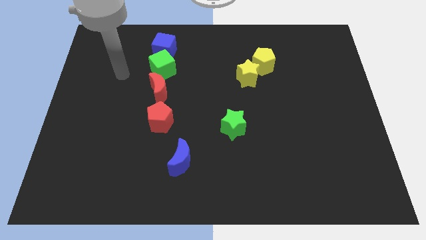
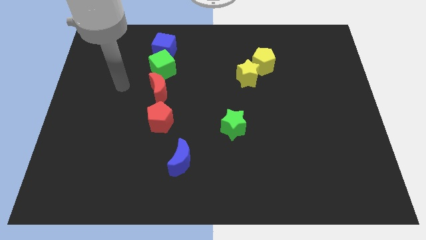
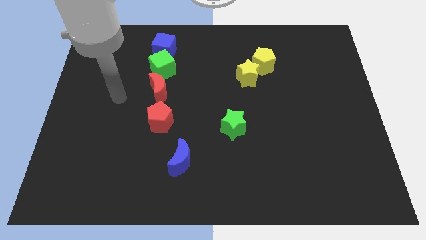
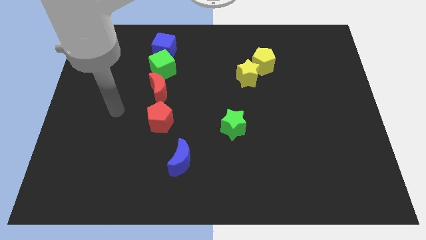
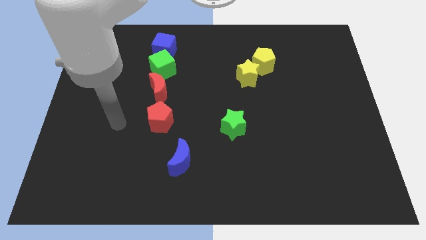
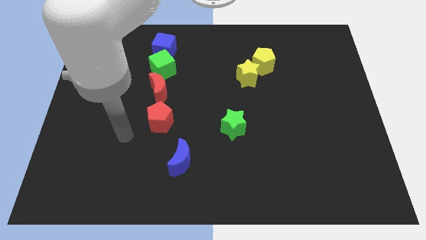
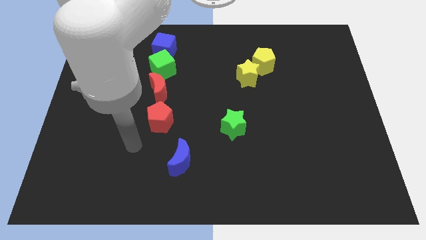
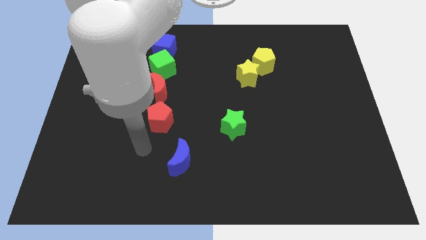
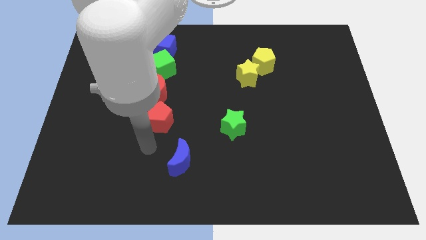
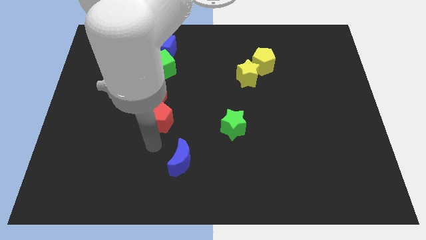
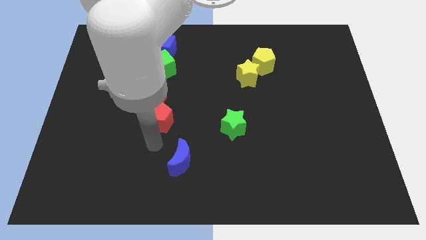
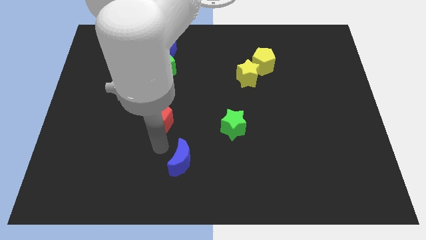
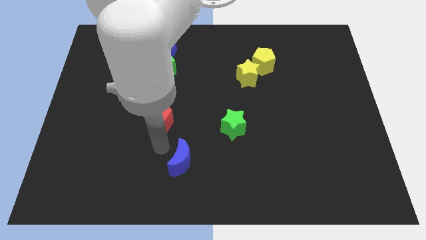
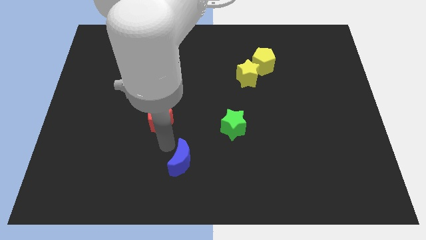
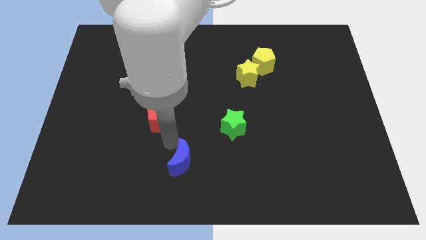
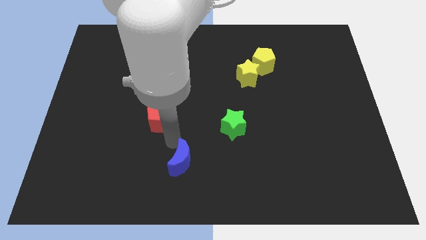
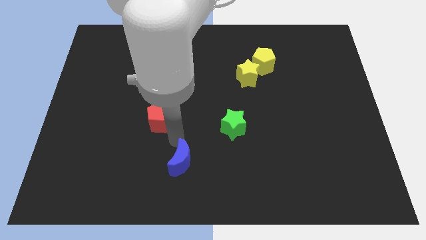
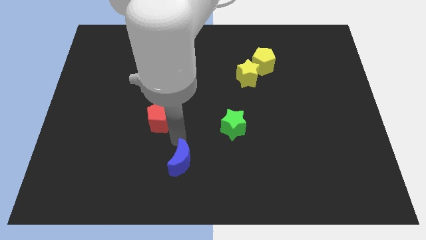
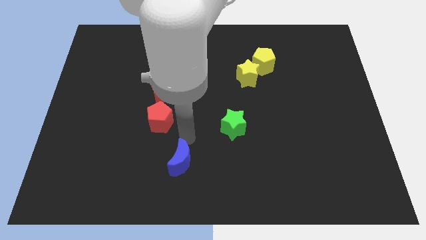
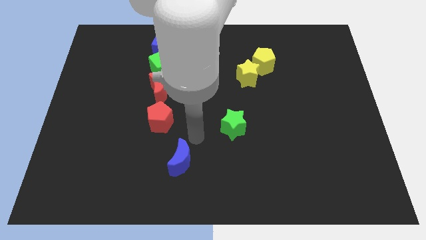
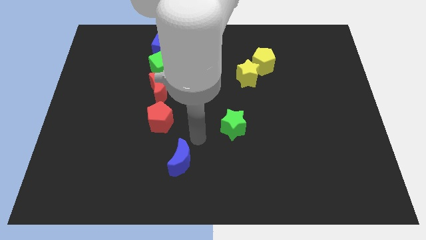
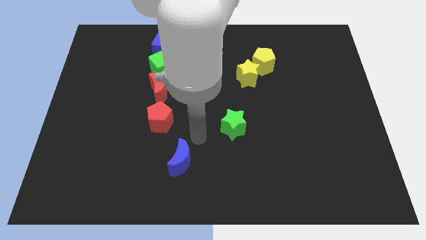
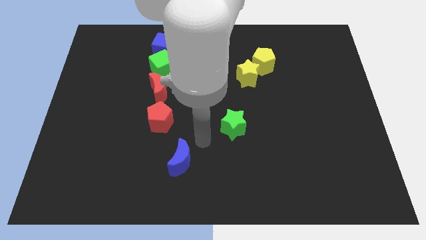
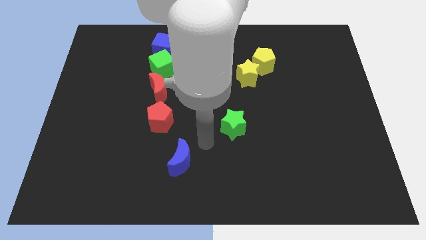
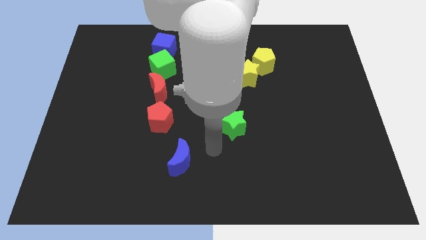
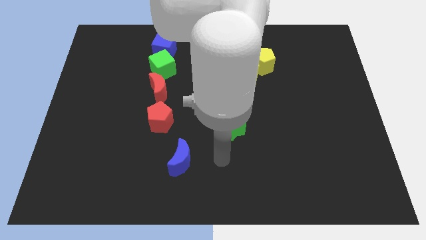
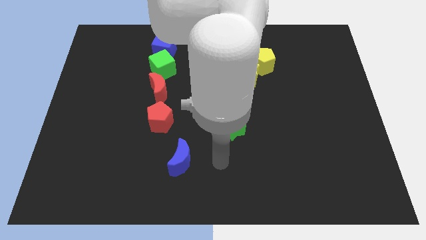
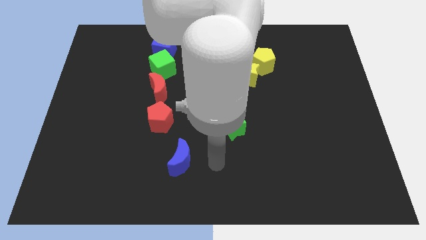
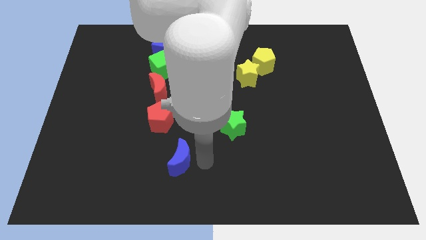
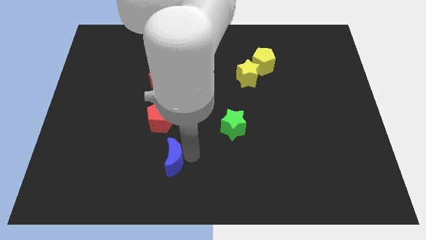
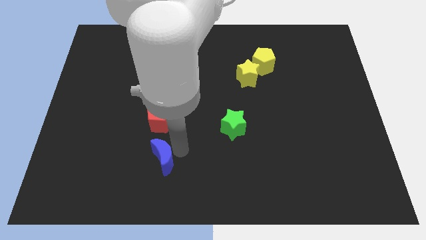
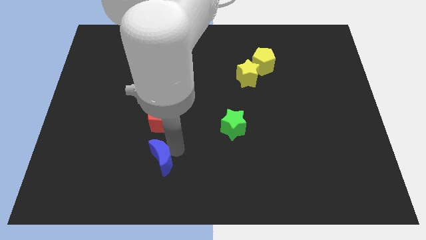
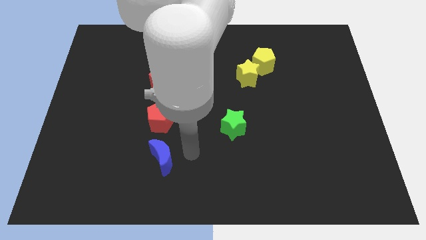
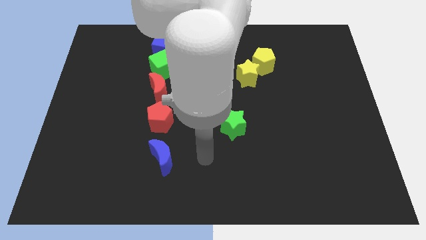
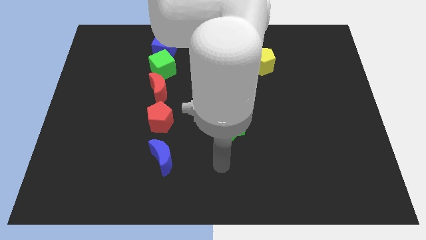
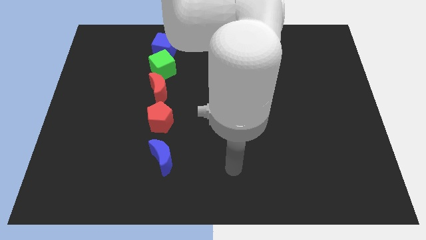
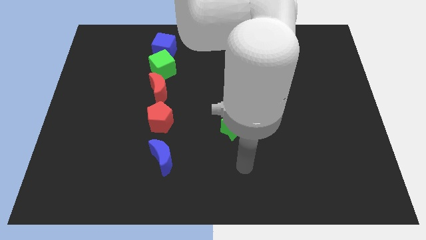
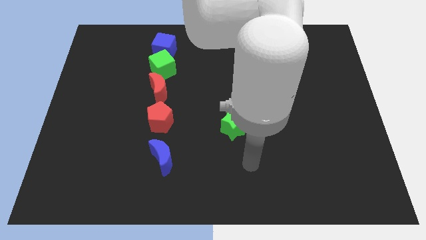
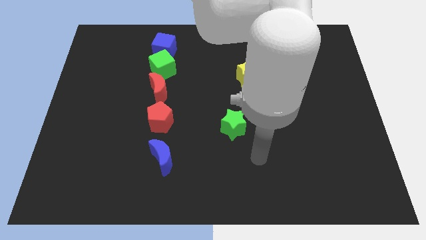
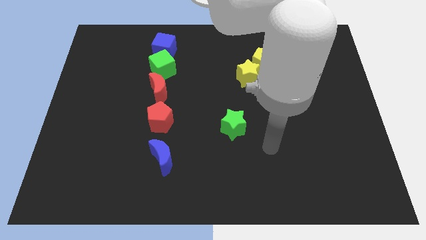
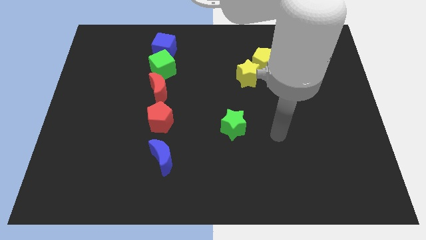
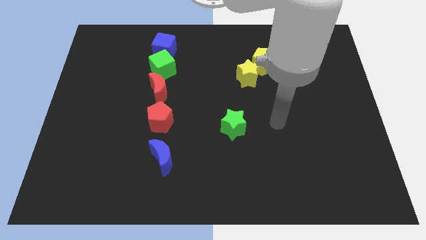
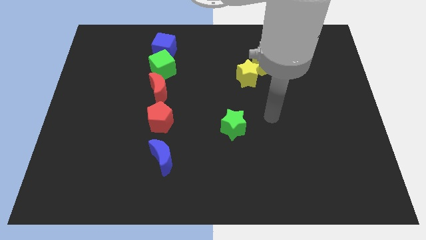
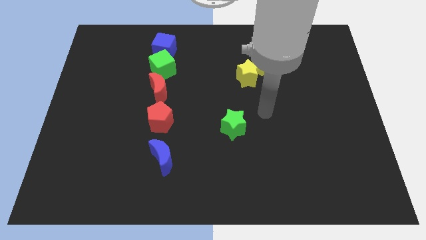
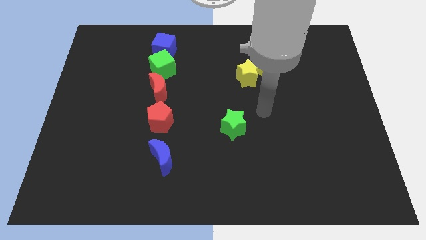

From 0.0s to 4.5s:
move the blue moon below the red pentagon

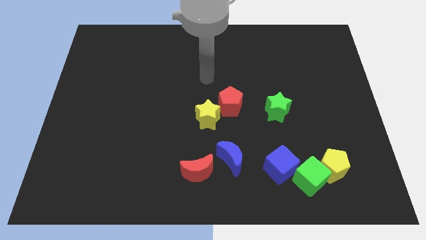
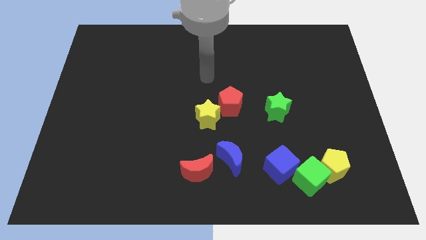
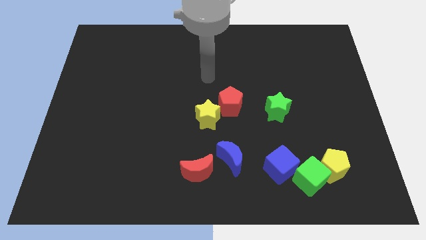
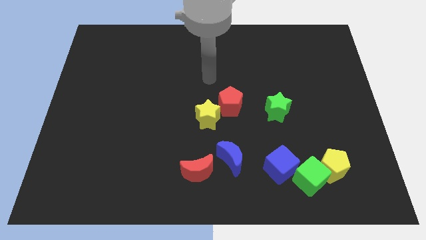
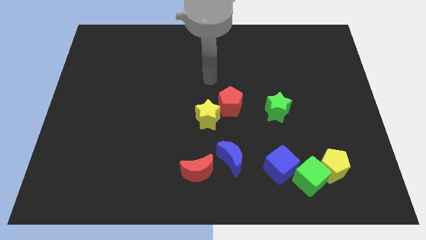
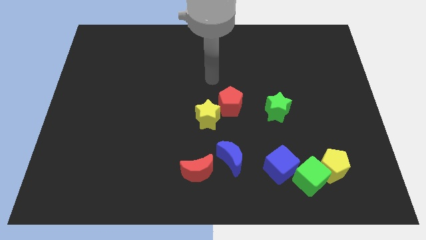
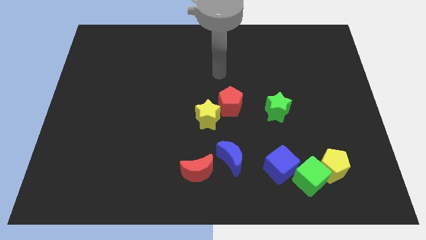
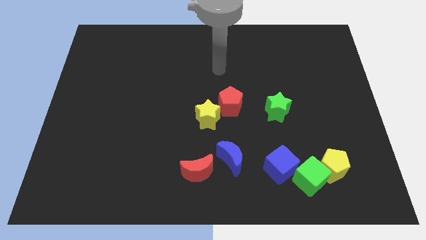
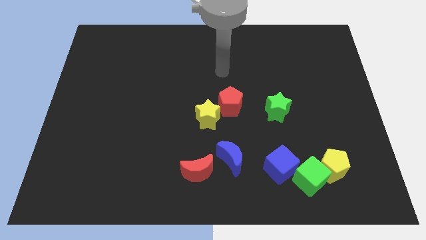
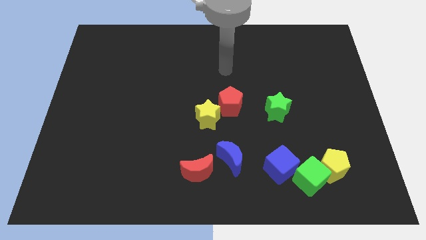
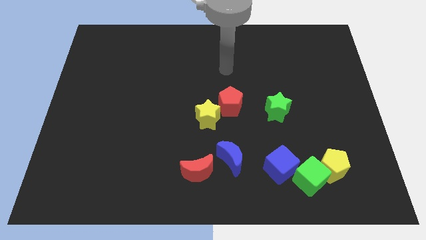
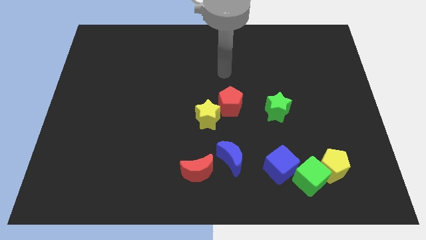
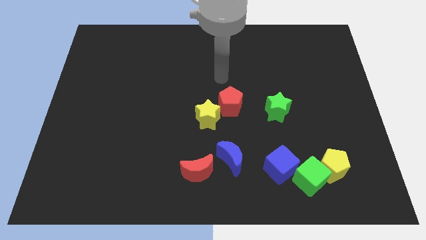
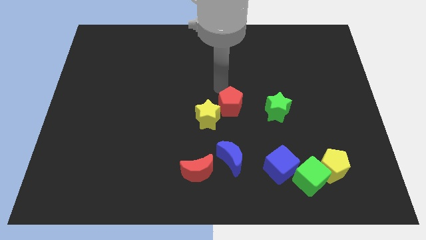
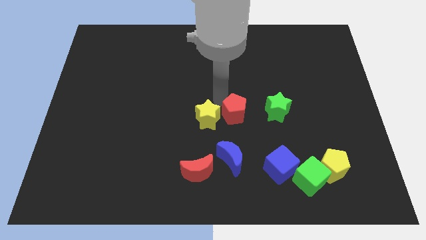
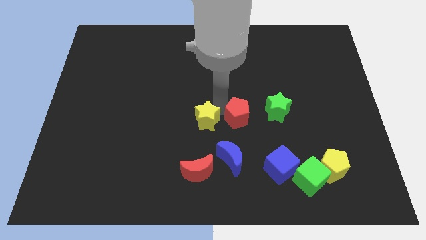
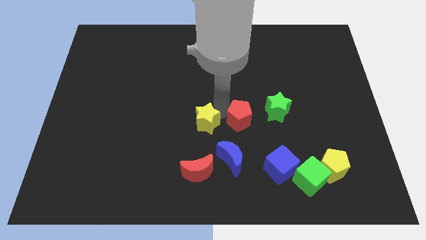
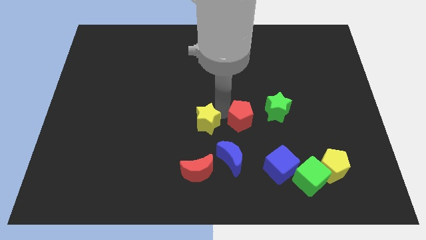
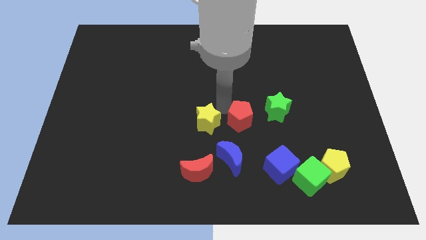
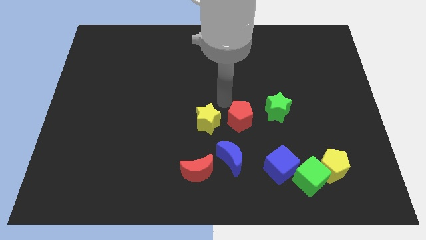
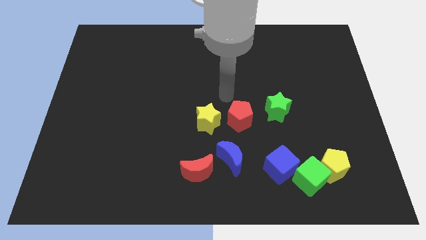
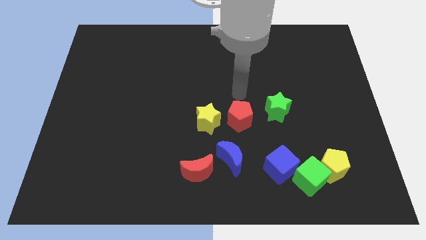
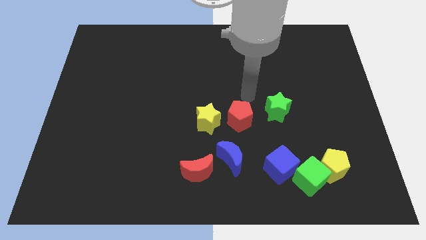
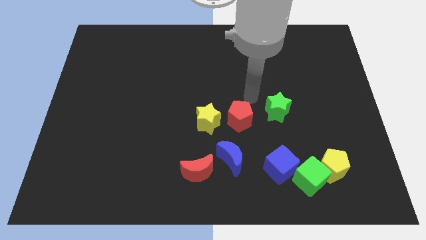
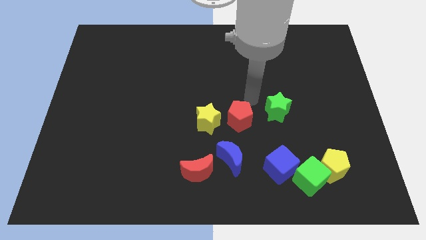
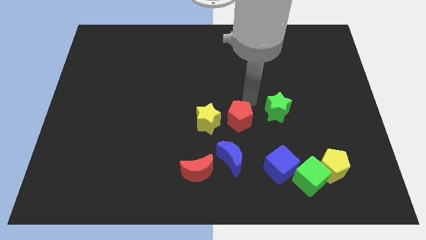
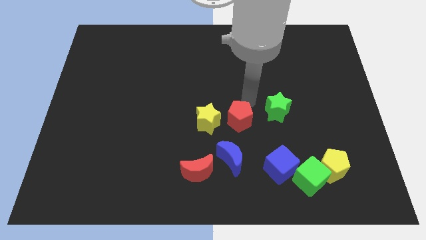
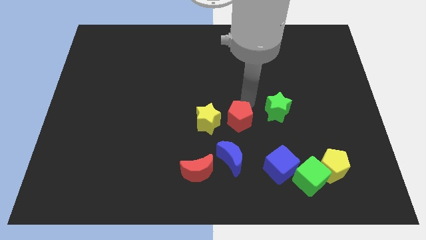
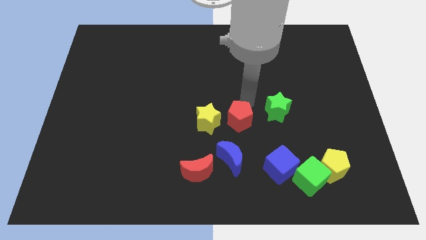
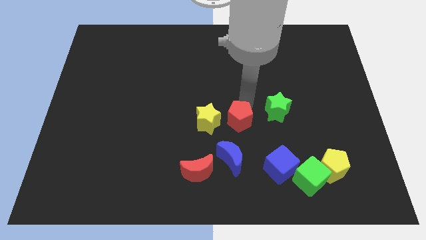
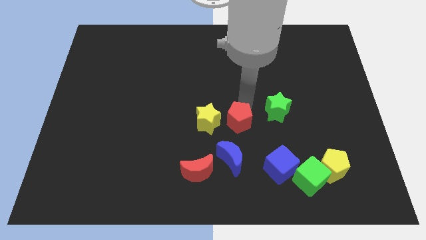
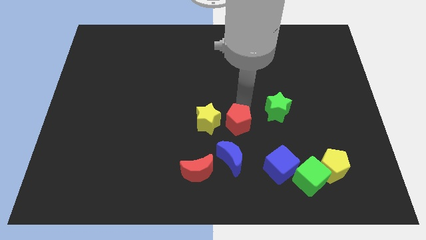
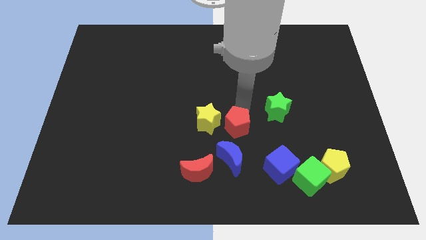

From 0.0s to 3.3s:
point your arm above the red pentagon

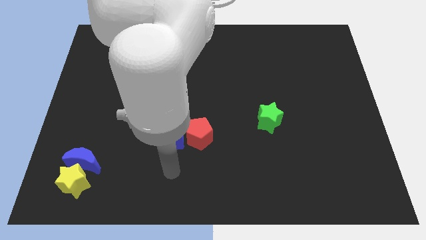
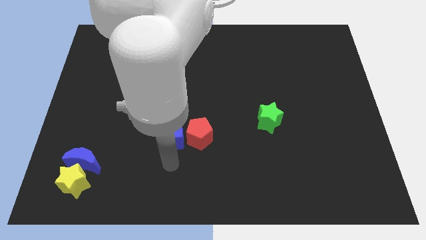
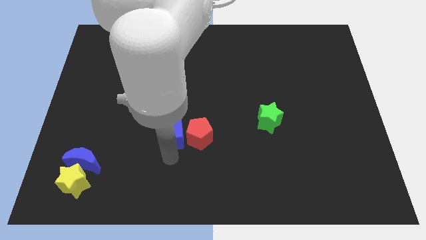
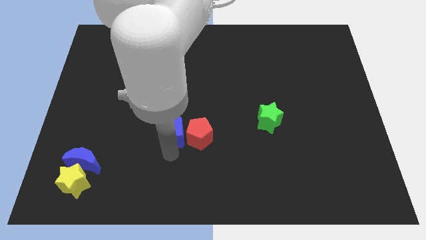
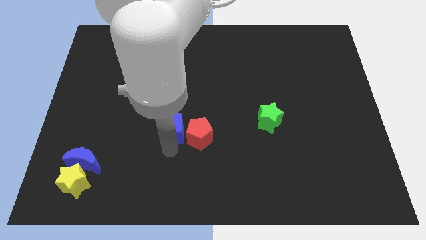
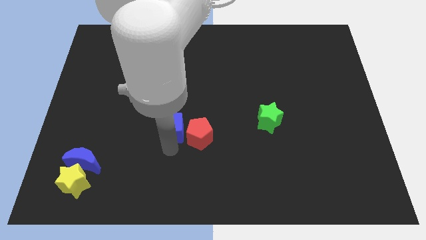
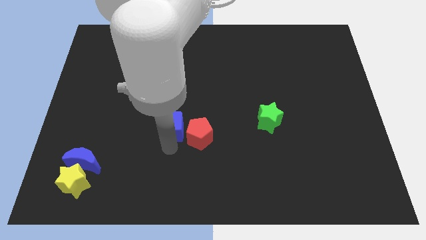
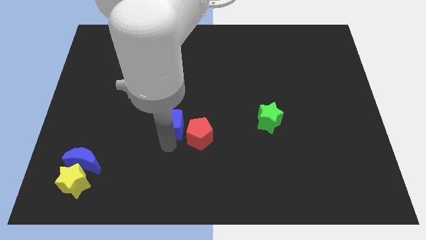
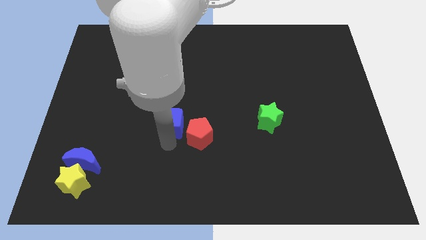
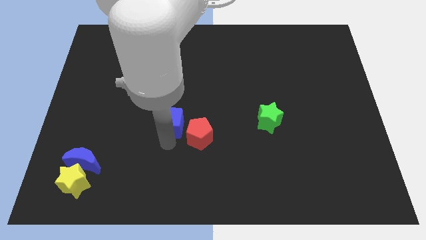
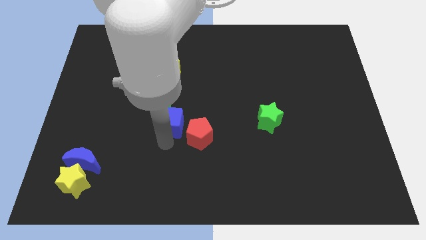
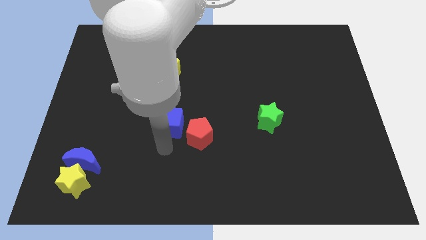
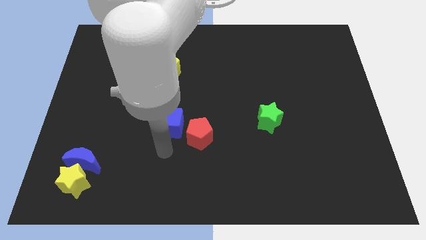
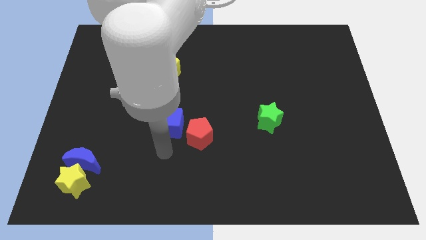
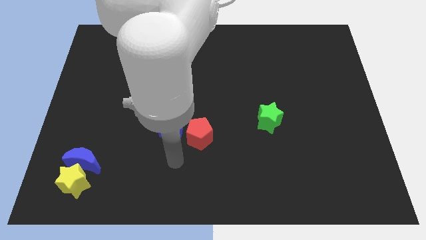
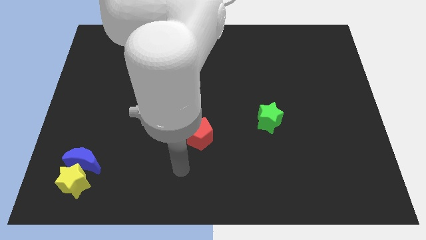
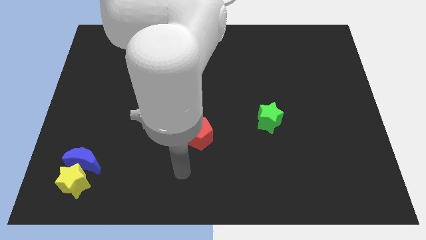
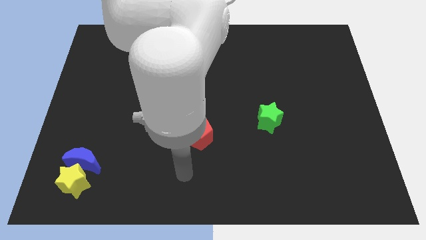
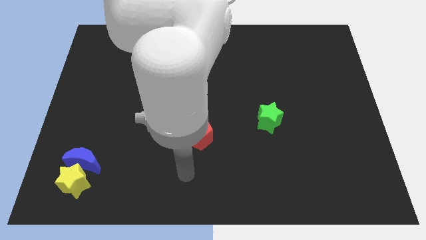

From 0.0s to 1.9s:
push the blue cube towards the top of the board
